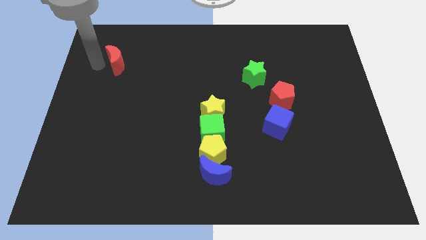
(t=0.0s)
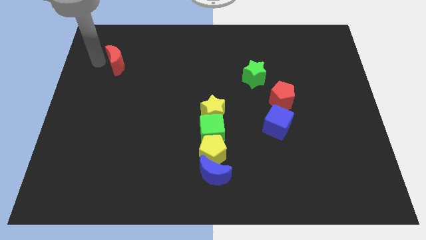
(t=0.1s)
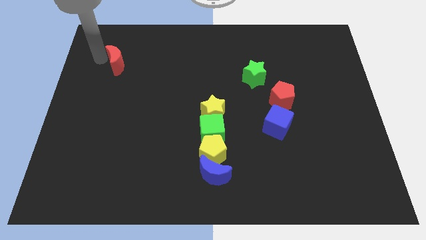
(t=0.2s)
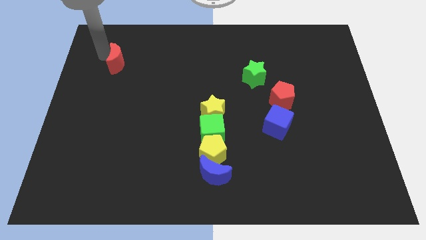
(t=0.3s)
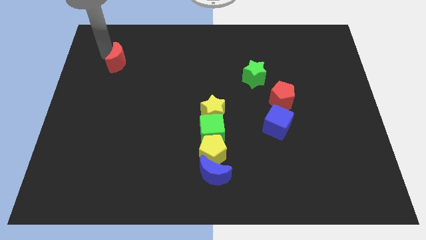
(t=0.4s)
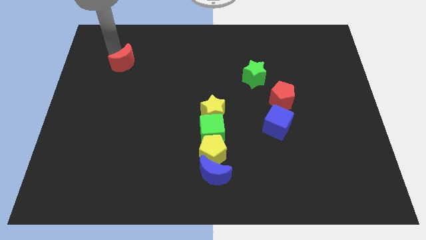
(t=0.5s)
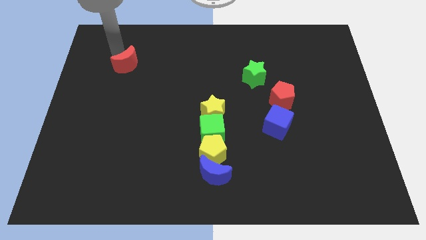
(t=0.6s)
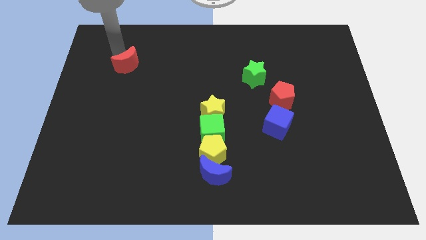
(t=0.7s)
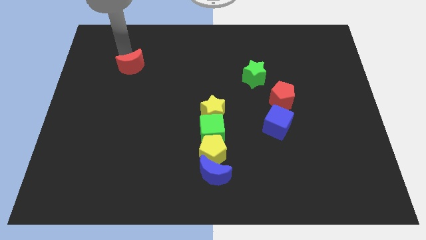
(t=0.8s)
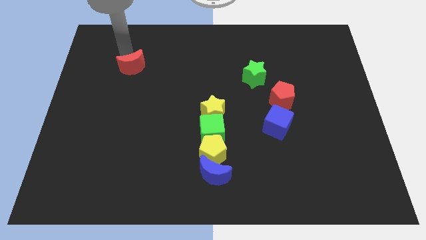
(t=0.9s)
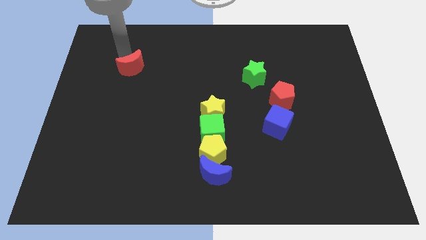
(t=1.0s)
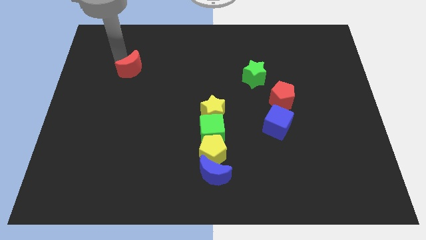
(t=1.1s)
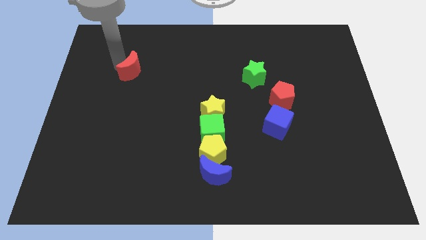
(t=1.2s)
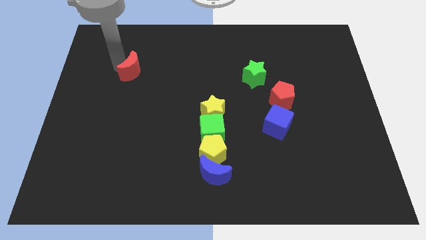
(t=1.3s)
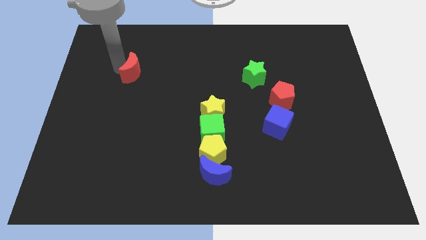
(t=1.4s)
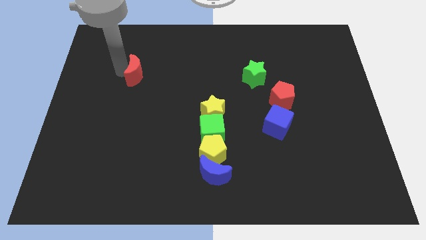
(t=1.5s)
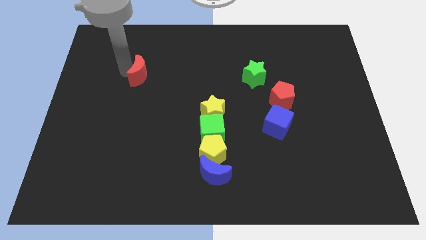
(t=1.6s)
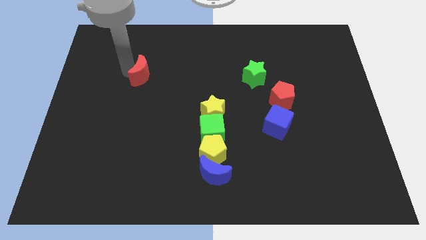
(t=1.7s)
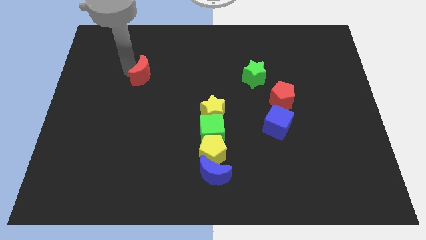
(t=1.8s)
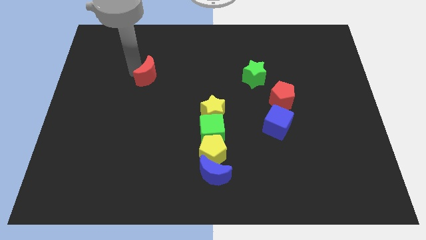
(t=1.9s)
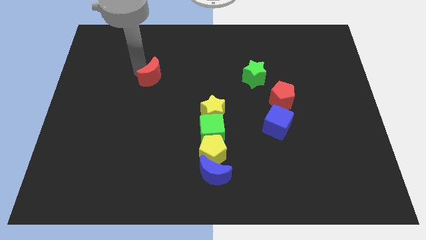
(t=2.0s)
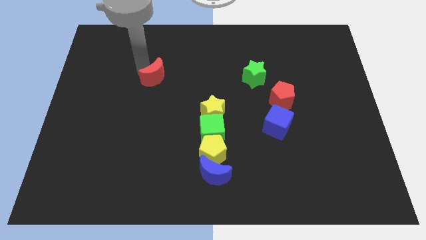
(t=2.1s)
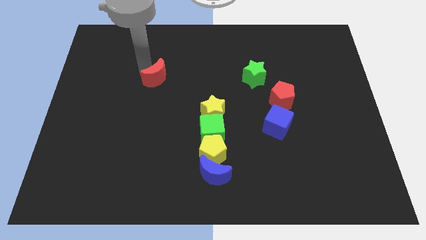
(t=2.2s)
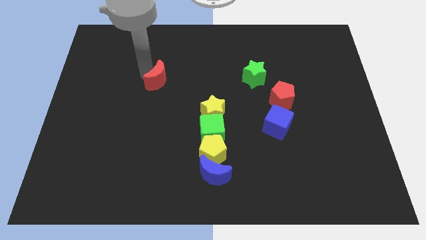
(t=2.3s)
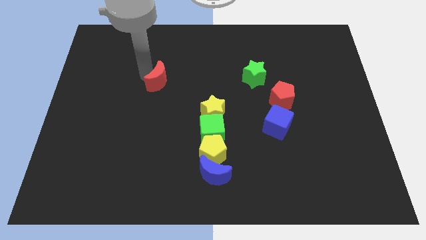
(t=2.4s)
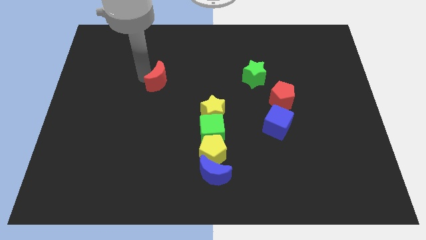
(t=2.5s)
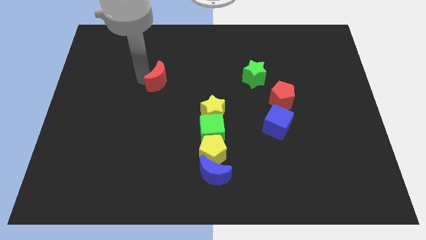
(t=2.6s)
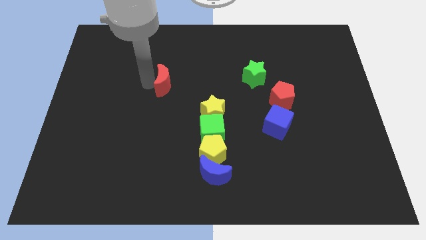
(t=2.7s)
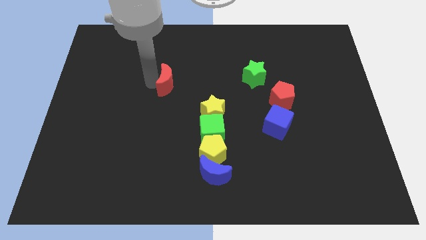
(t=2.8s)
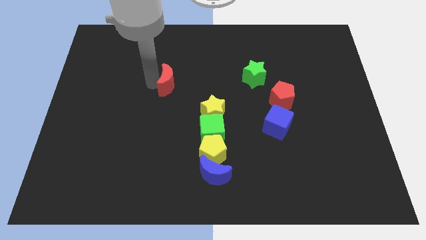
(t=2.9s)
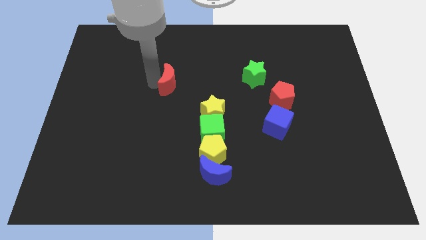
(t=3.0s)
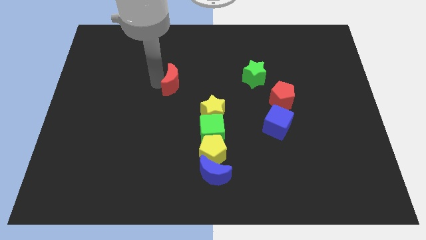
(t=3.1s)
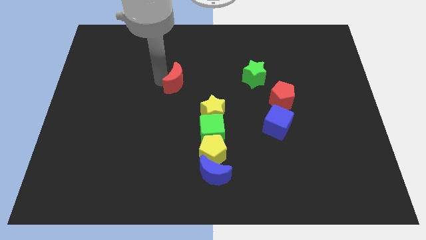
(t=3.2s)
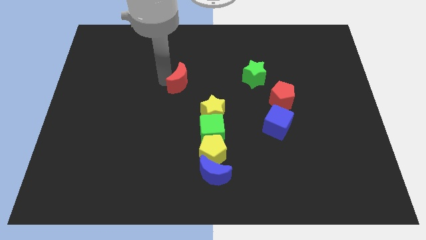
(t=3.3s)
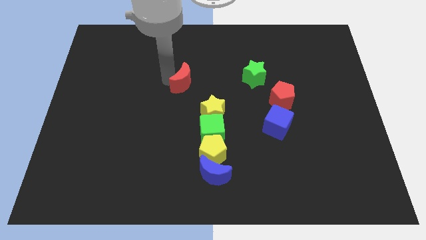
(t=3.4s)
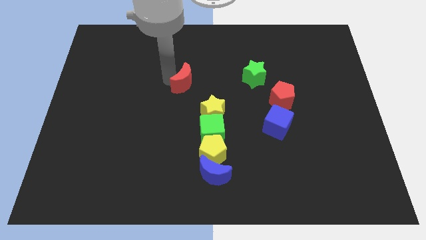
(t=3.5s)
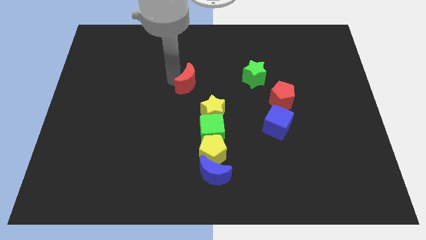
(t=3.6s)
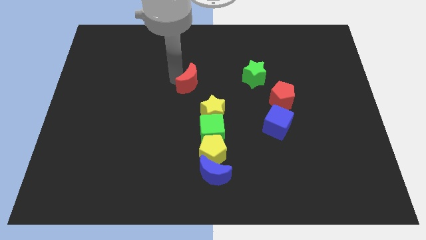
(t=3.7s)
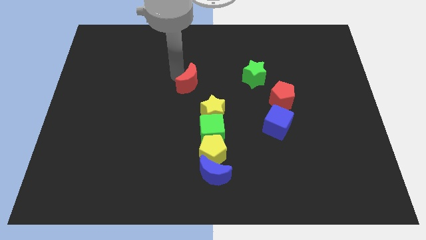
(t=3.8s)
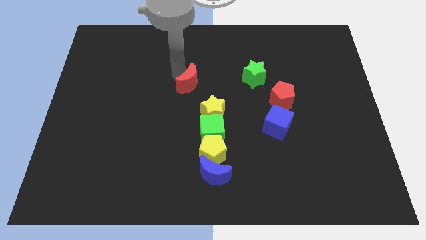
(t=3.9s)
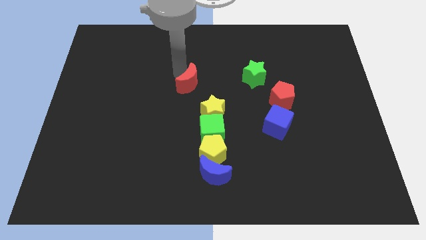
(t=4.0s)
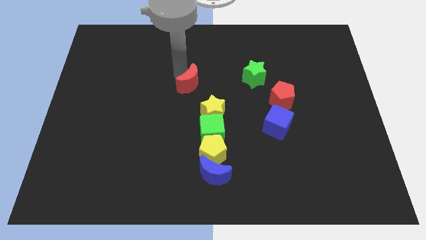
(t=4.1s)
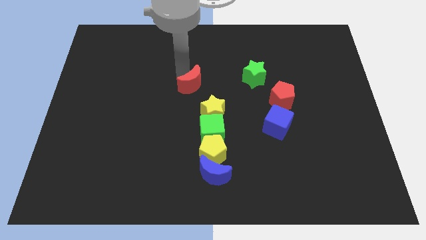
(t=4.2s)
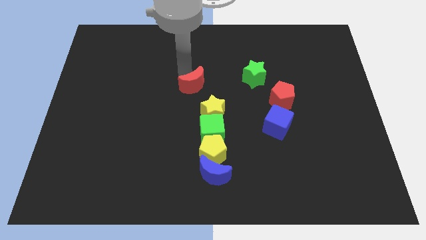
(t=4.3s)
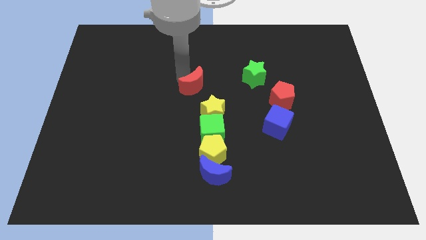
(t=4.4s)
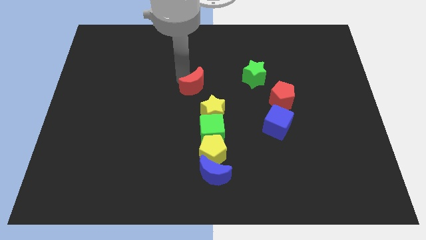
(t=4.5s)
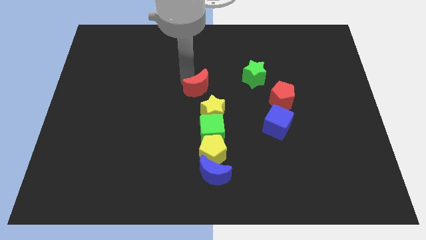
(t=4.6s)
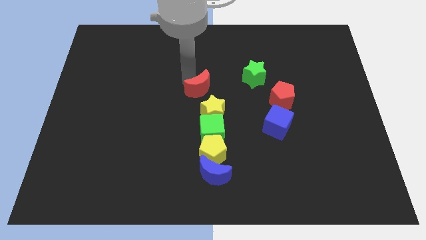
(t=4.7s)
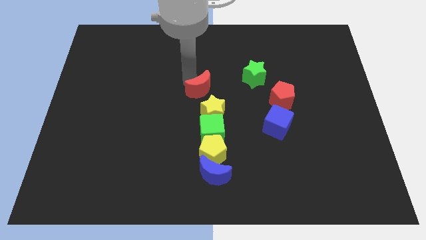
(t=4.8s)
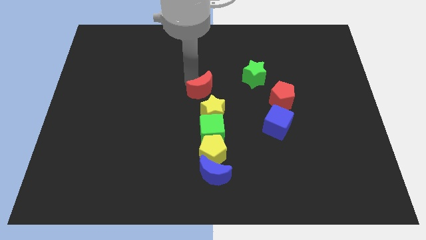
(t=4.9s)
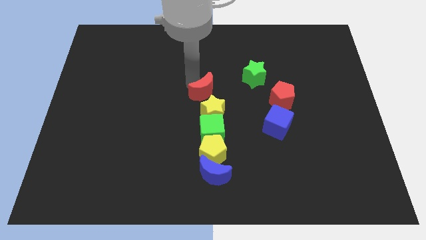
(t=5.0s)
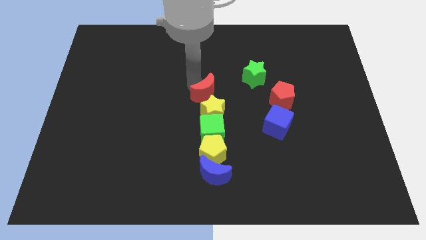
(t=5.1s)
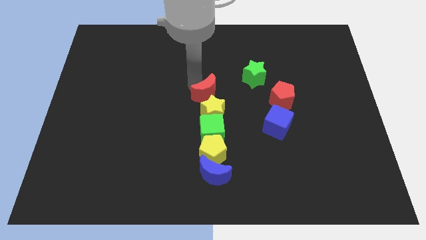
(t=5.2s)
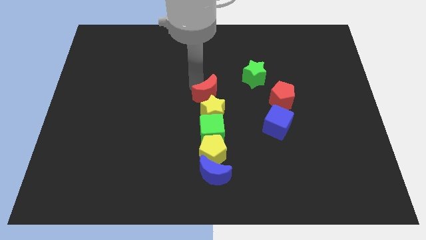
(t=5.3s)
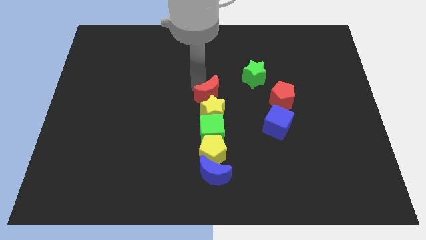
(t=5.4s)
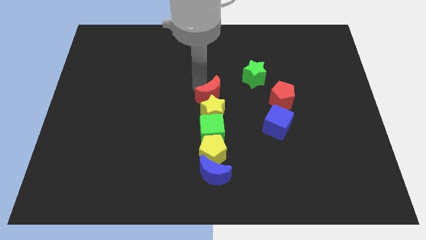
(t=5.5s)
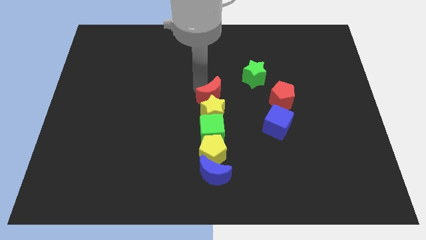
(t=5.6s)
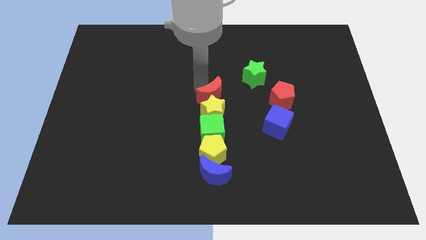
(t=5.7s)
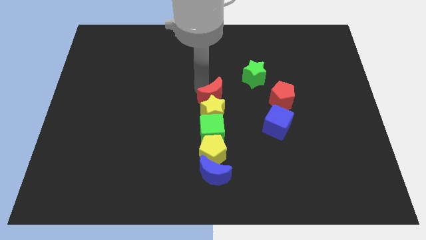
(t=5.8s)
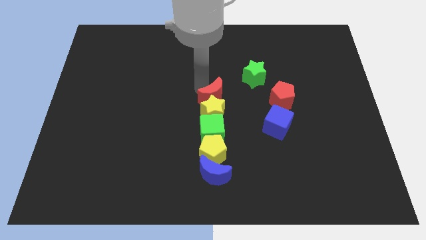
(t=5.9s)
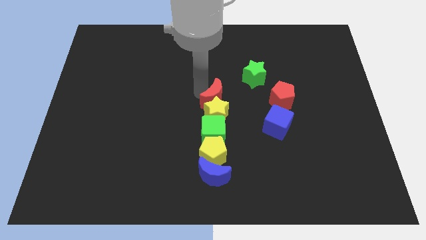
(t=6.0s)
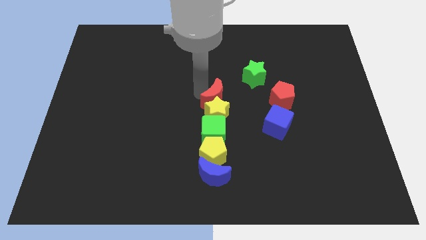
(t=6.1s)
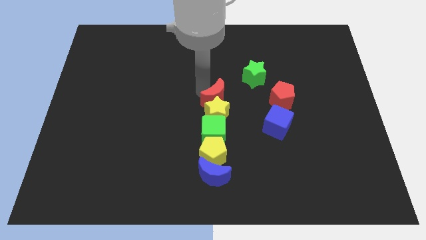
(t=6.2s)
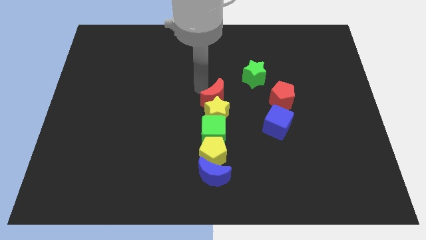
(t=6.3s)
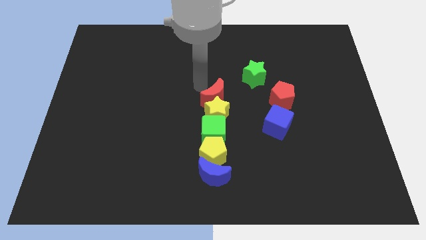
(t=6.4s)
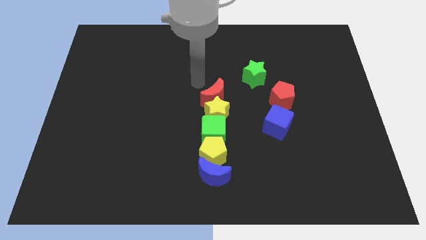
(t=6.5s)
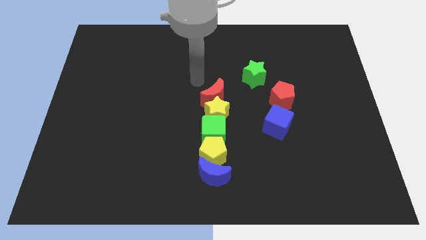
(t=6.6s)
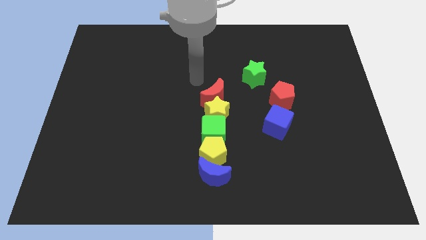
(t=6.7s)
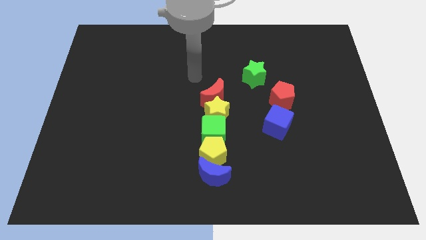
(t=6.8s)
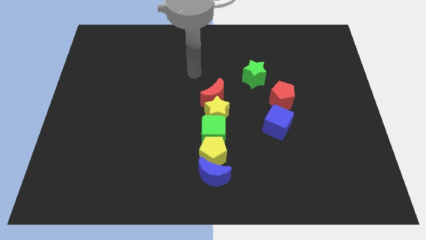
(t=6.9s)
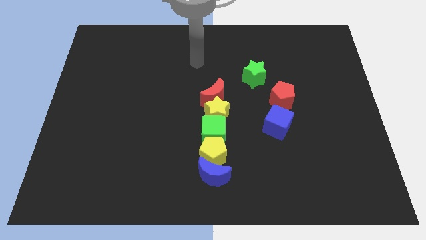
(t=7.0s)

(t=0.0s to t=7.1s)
push the red moon above the yellow star

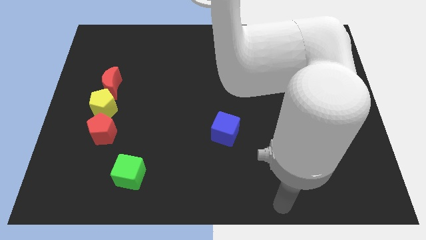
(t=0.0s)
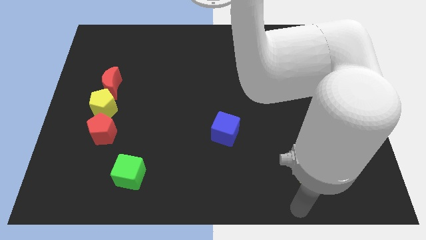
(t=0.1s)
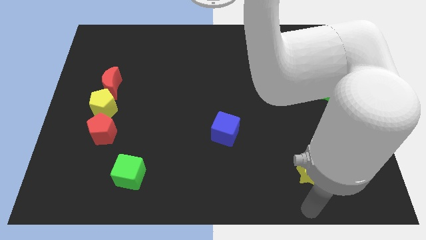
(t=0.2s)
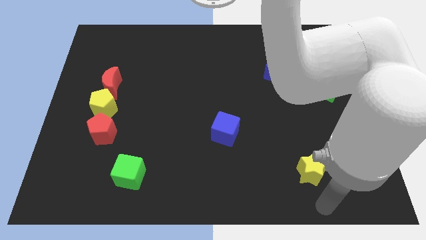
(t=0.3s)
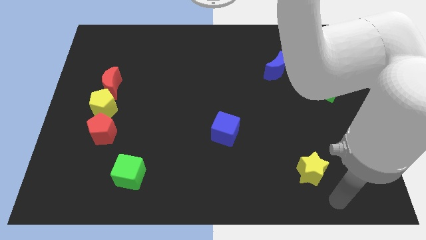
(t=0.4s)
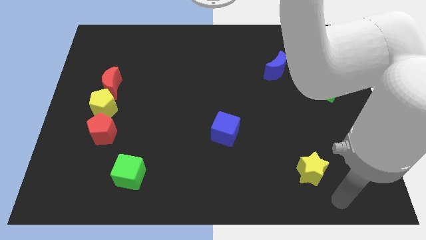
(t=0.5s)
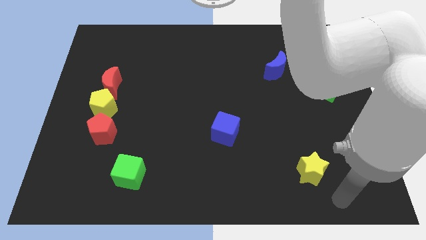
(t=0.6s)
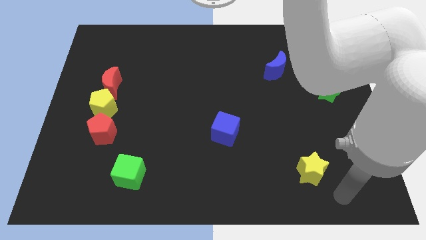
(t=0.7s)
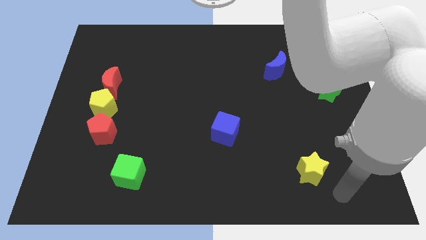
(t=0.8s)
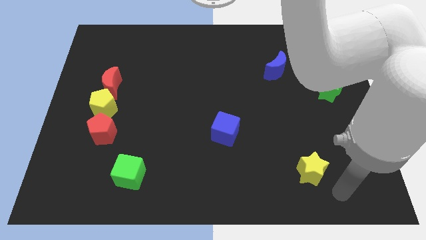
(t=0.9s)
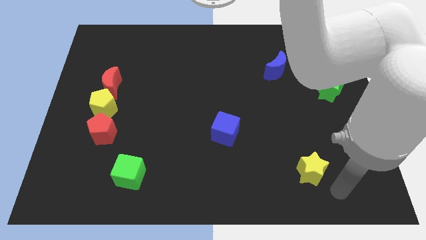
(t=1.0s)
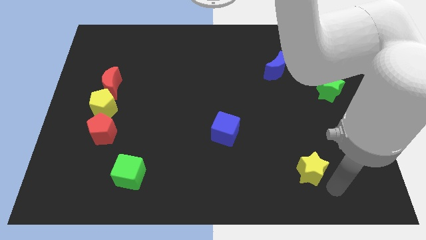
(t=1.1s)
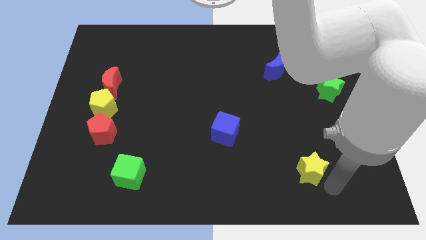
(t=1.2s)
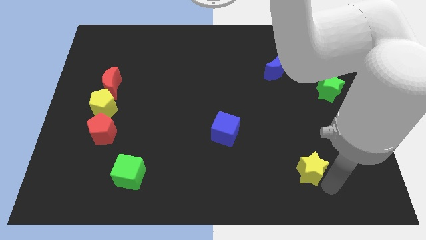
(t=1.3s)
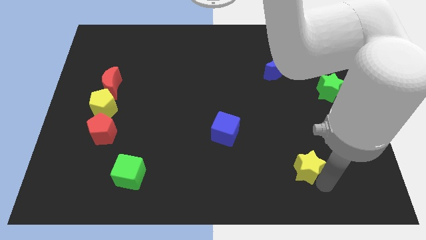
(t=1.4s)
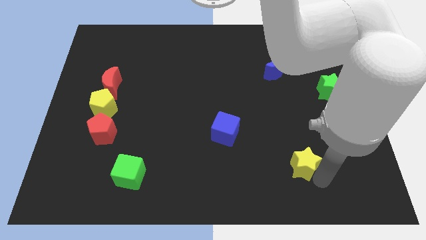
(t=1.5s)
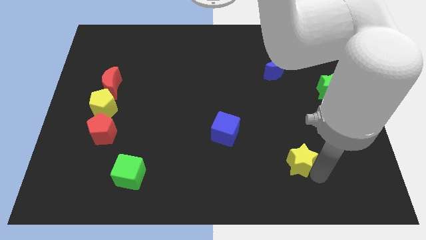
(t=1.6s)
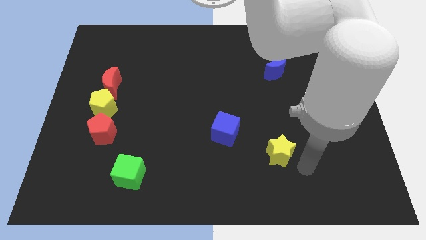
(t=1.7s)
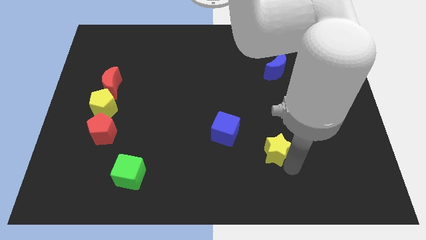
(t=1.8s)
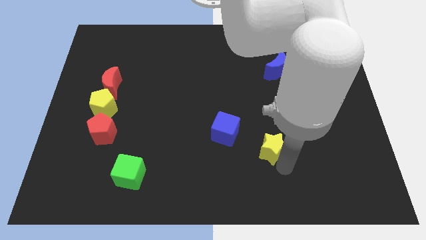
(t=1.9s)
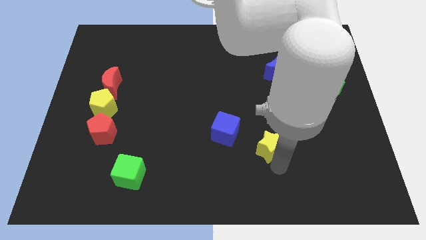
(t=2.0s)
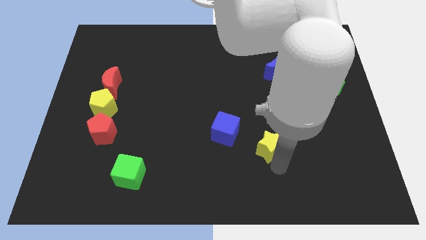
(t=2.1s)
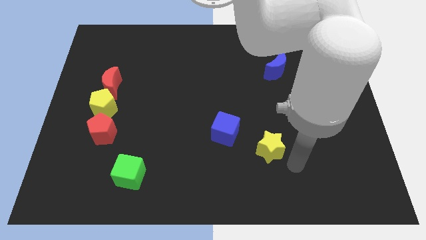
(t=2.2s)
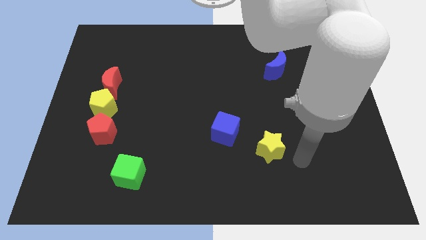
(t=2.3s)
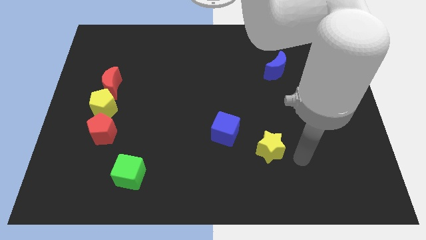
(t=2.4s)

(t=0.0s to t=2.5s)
push the yellow star towards the right of the blue cube
